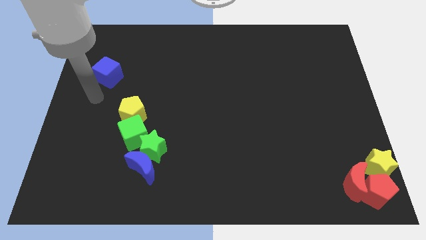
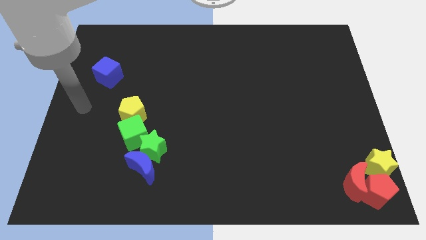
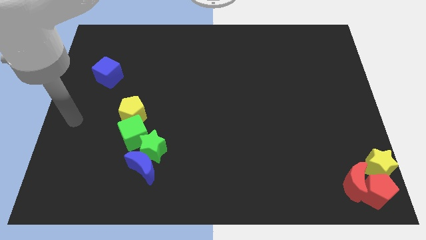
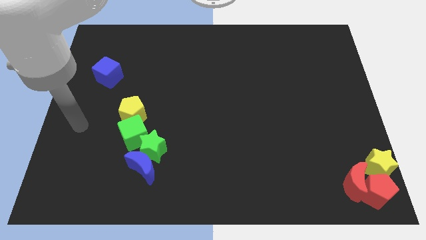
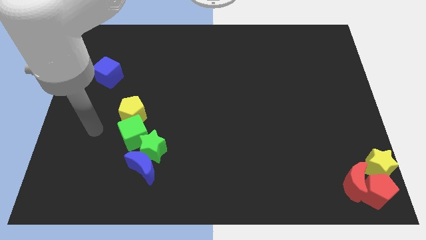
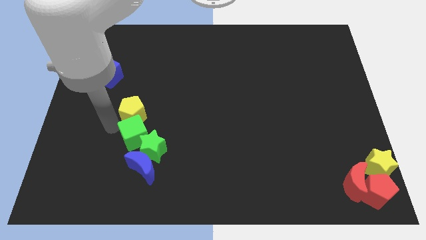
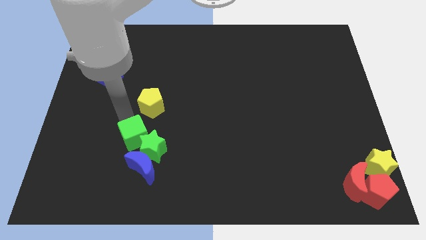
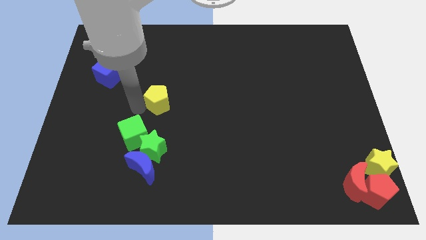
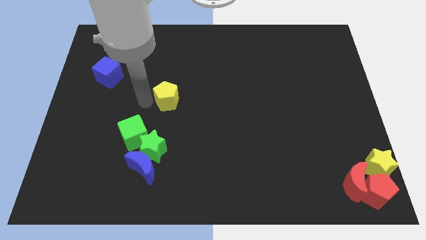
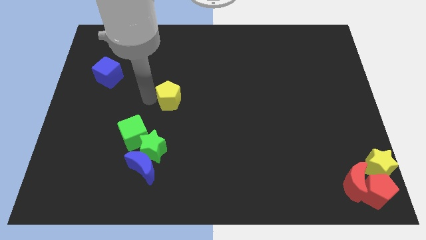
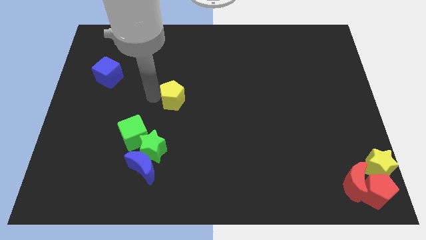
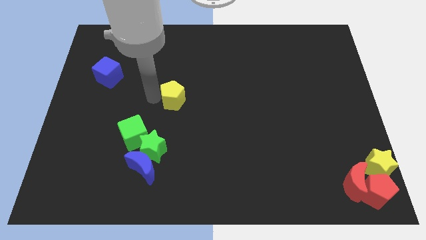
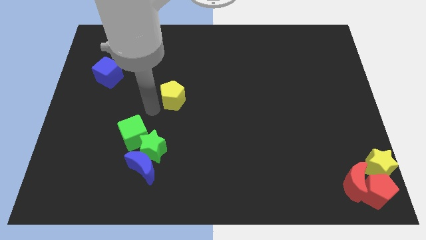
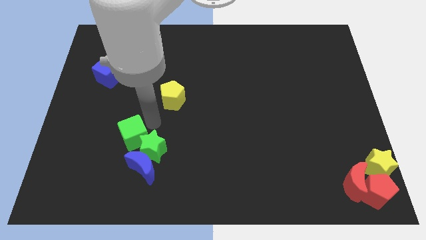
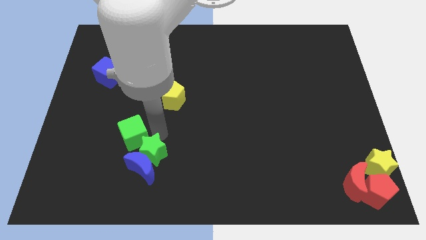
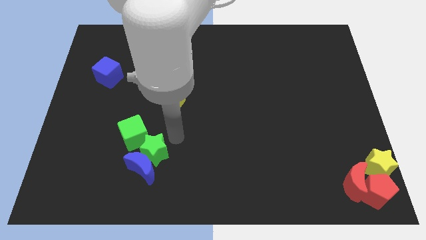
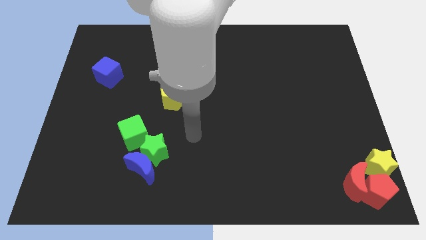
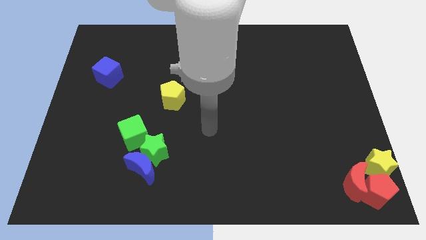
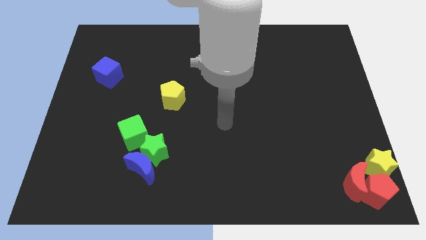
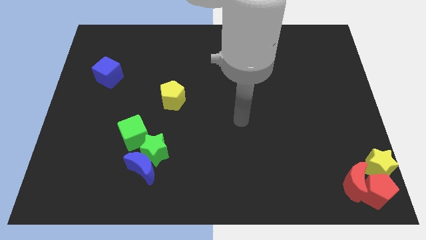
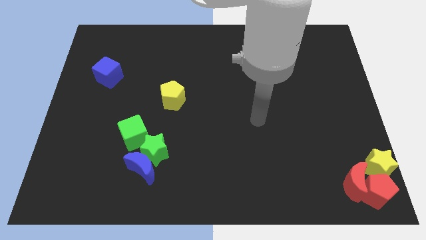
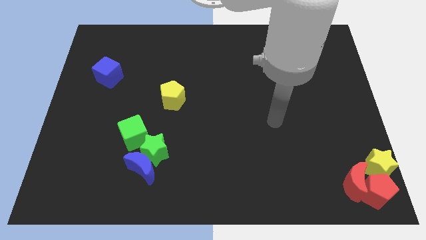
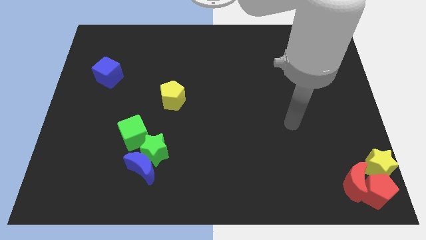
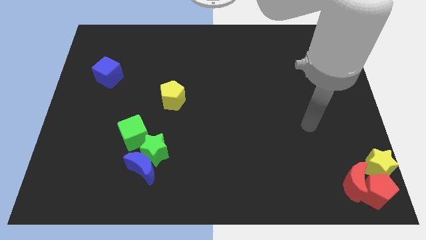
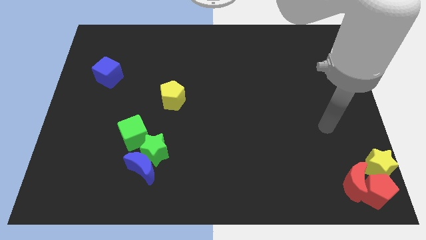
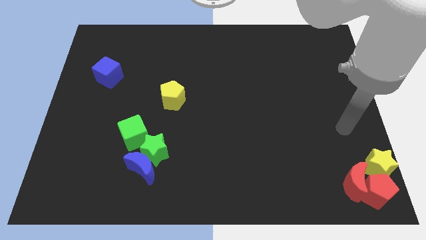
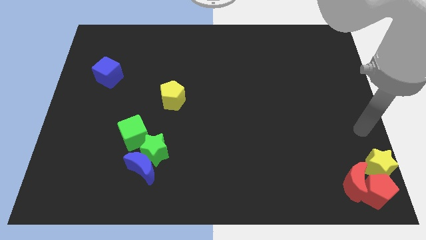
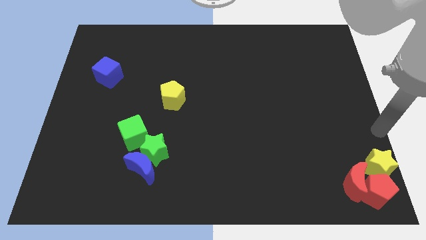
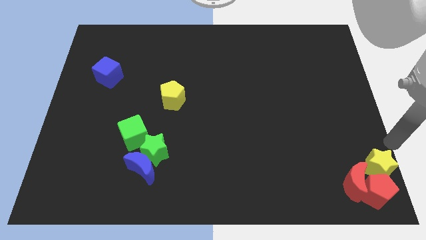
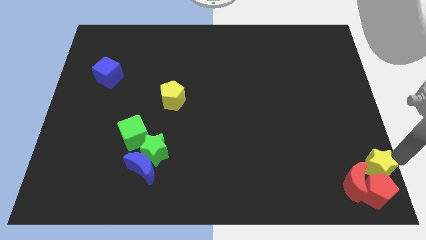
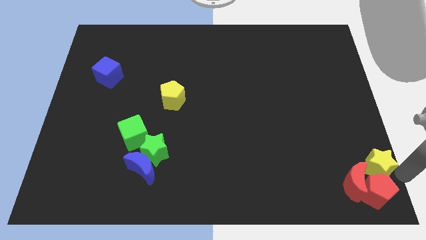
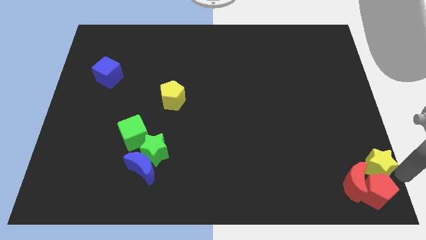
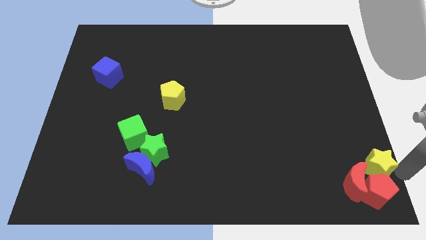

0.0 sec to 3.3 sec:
move the yellow pentagon diagonally on the top right side of the green cube

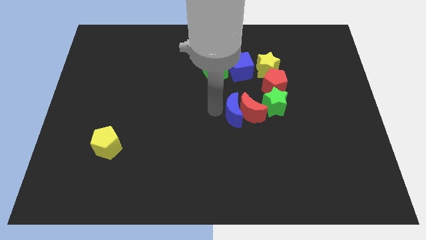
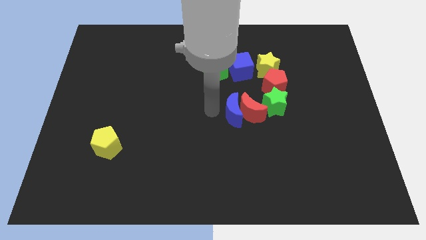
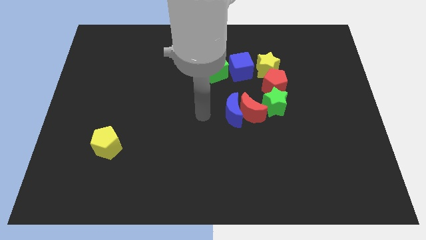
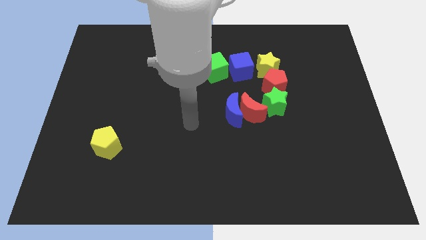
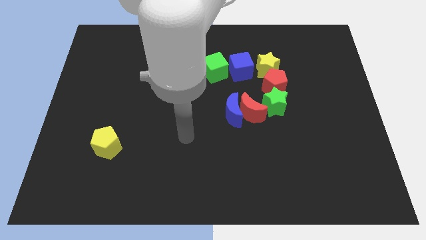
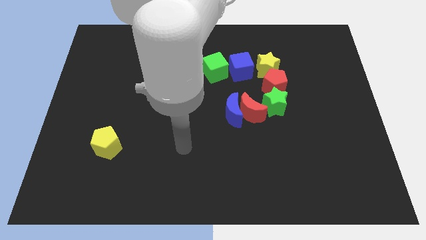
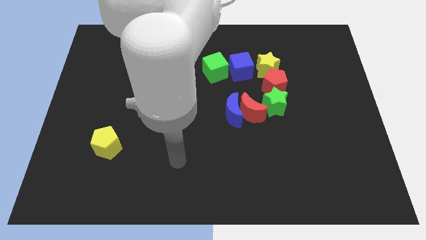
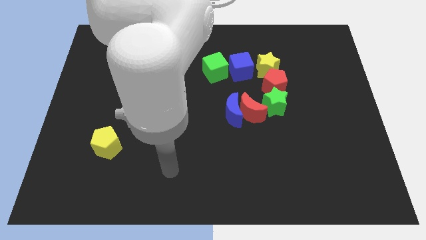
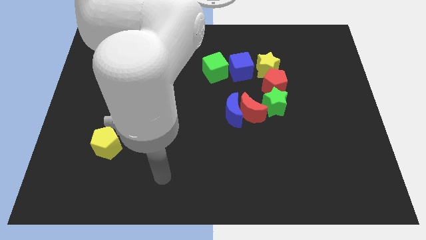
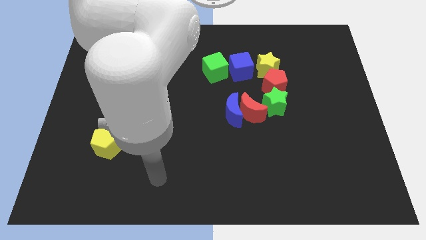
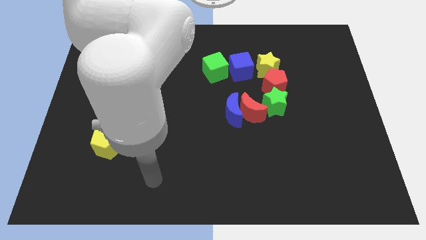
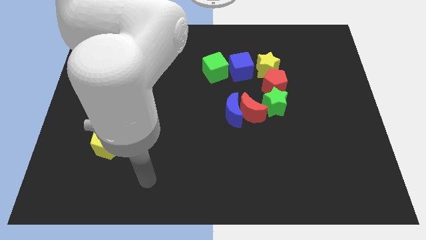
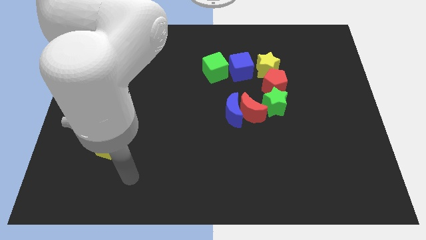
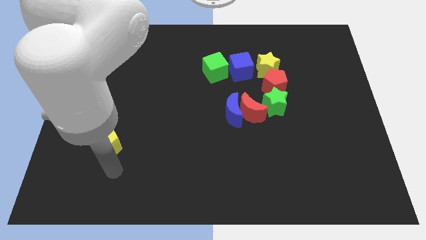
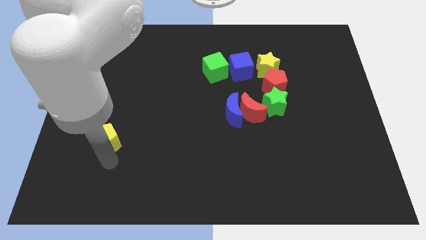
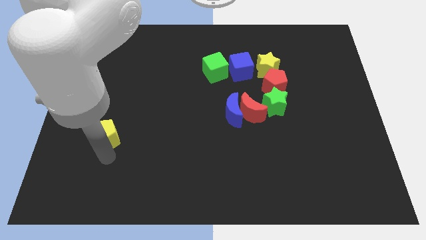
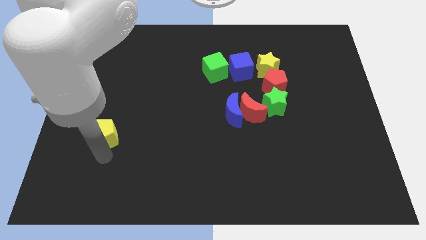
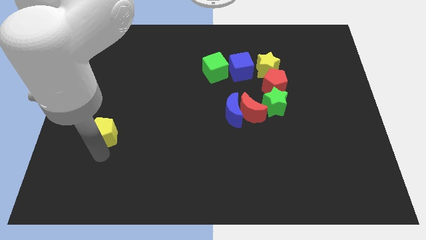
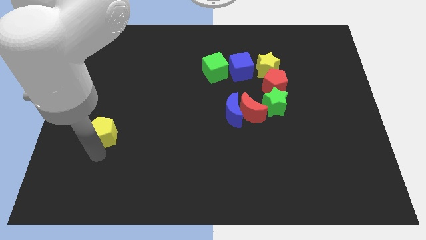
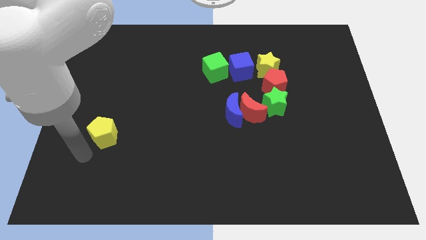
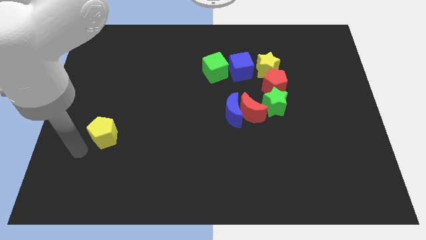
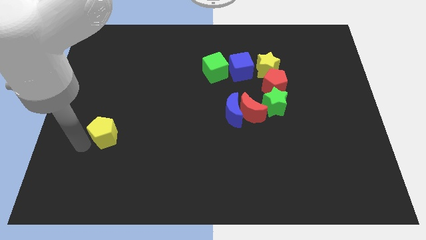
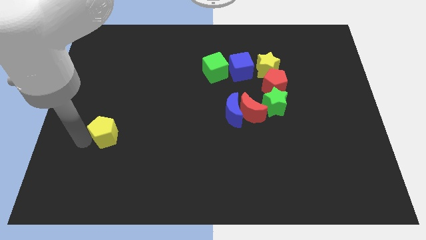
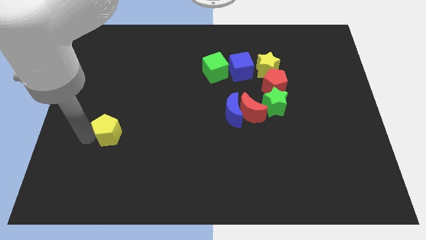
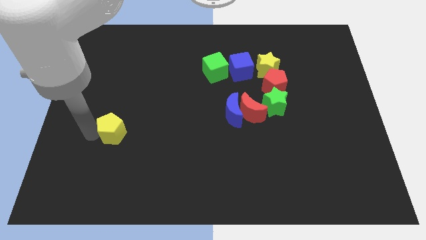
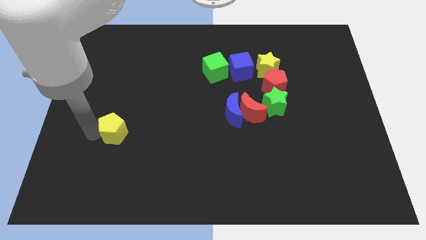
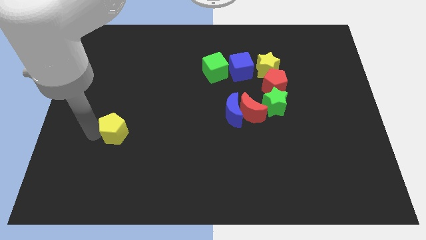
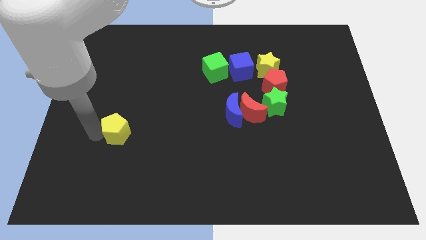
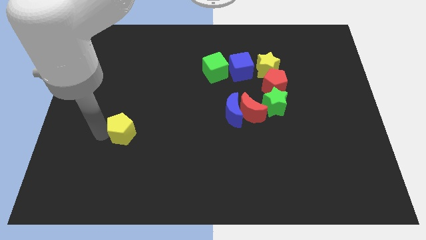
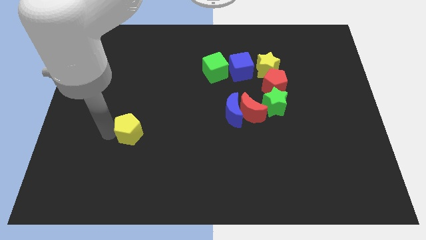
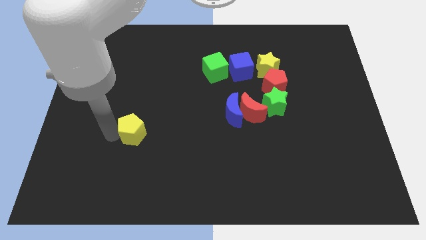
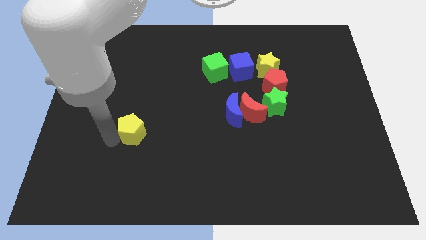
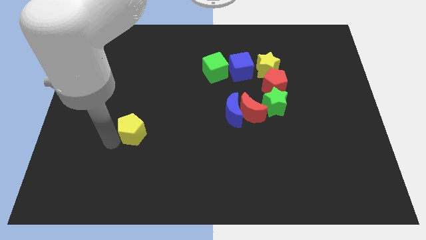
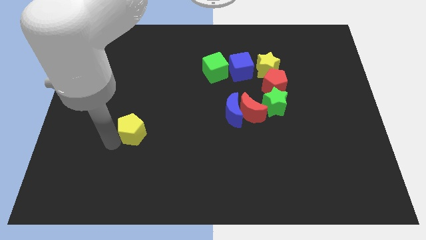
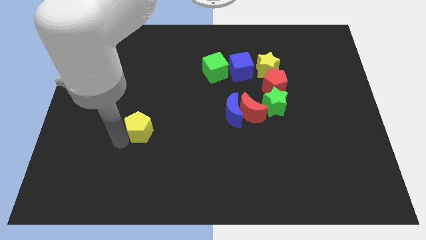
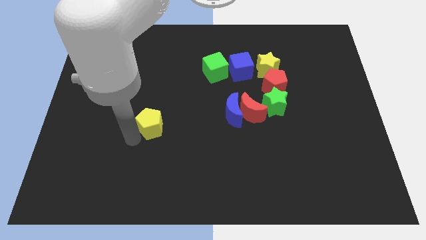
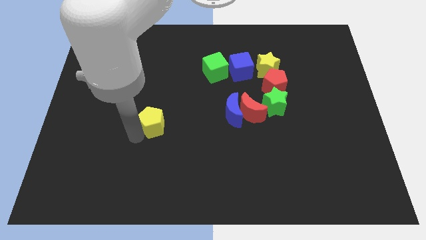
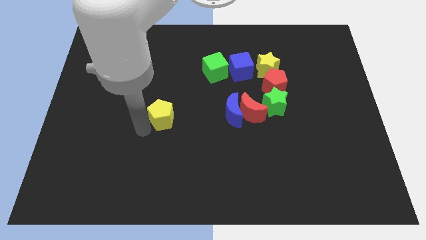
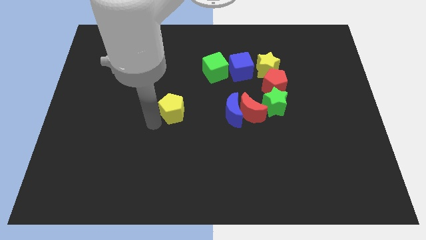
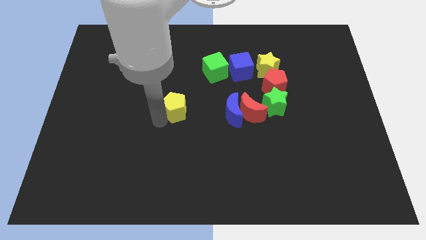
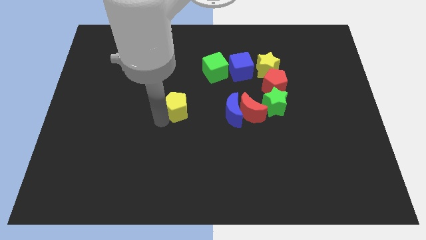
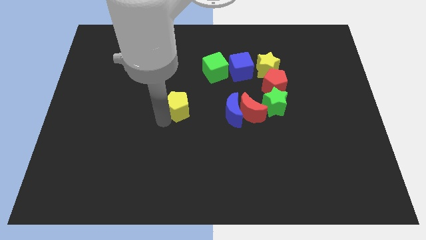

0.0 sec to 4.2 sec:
move the yellow pentagon towards the center of the board

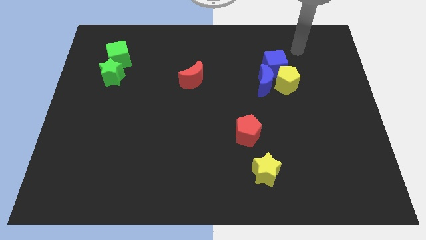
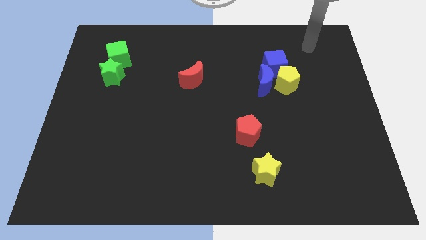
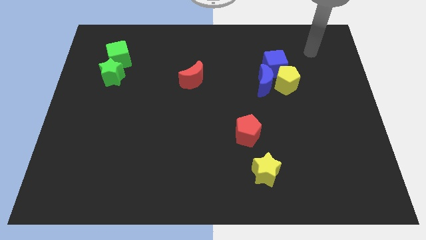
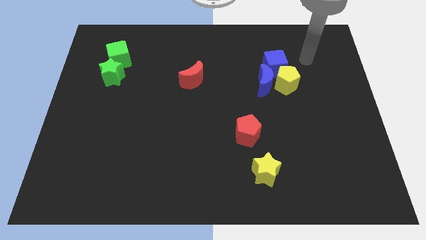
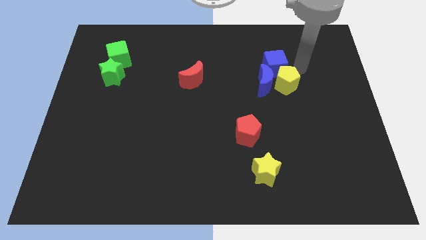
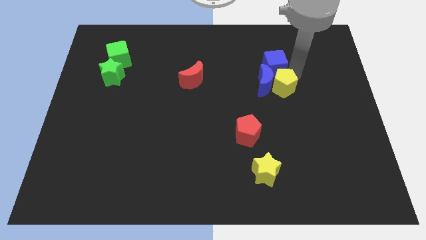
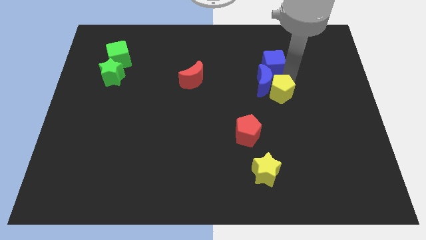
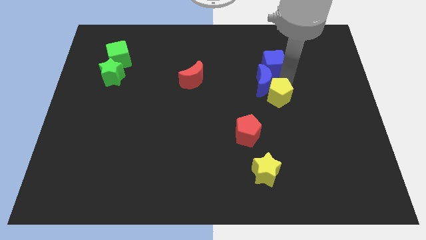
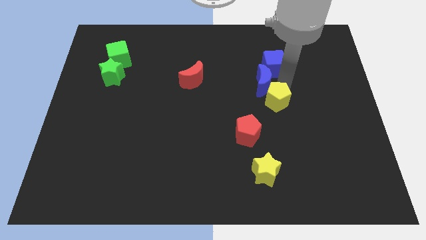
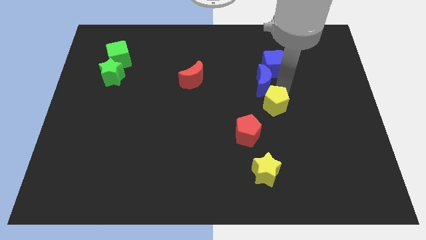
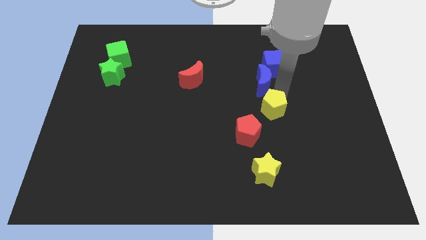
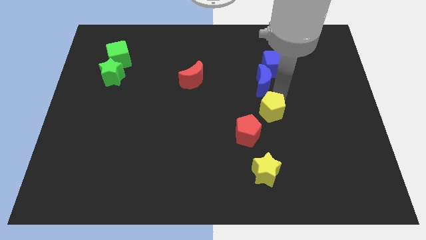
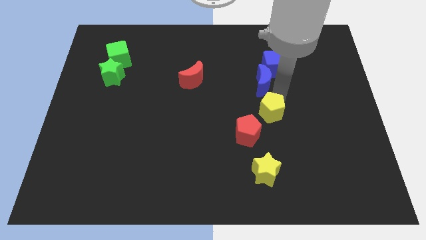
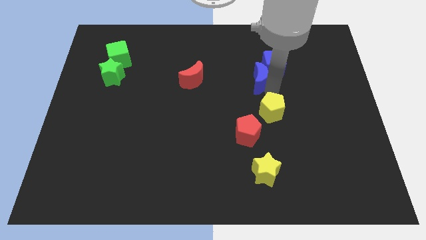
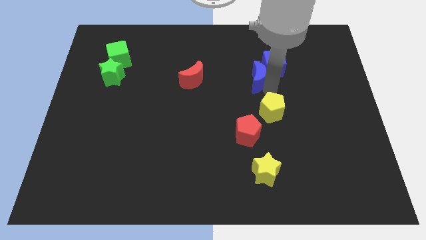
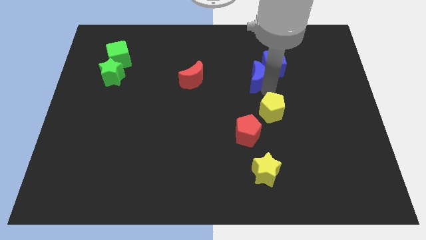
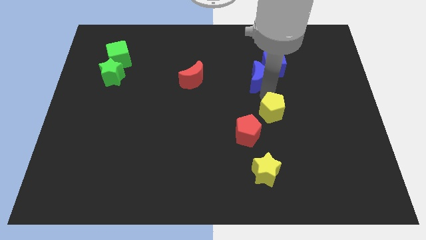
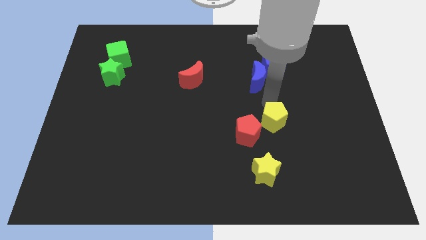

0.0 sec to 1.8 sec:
separate the yellow pentagon from the blue cube and blue crescent
